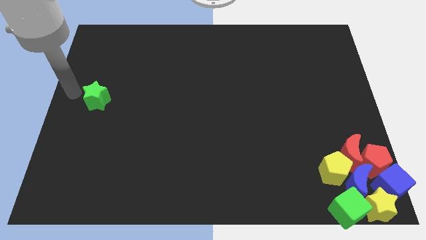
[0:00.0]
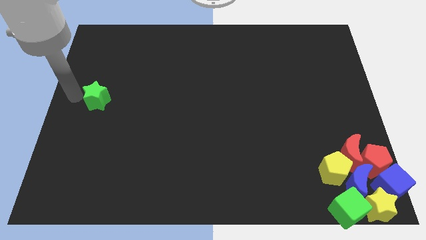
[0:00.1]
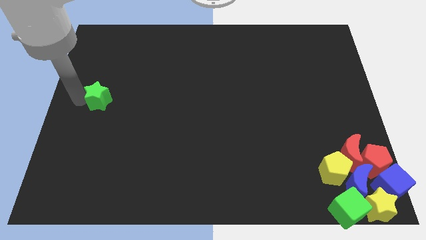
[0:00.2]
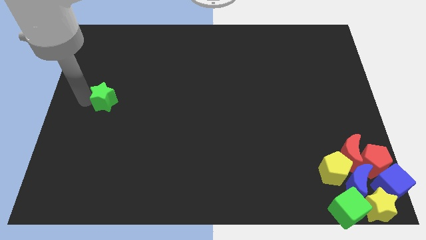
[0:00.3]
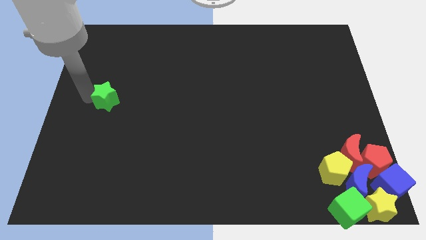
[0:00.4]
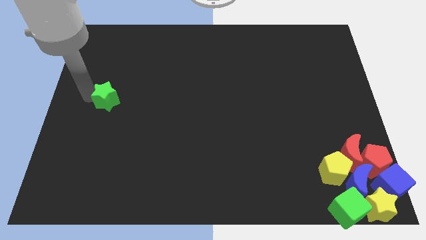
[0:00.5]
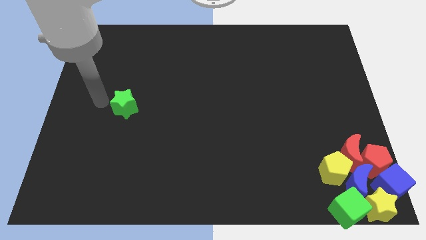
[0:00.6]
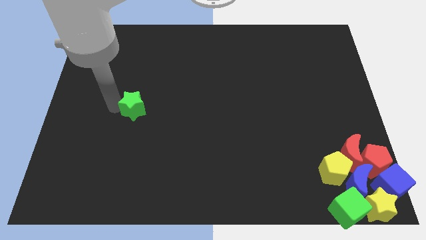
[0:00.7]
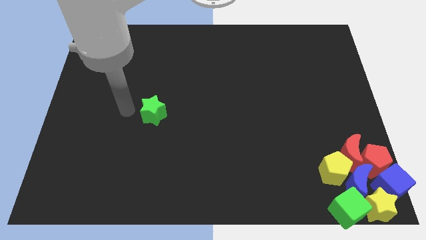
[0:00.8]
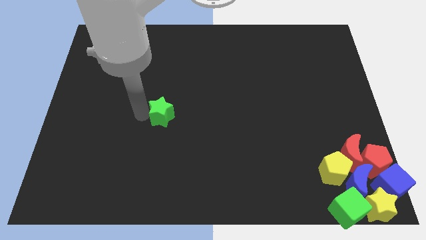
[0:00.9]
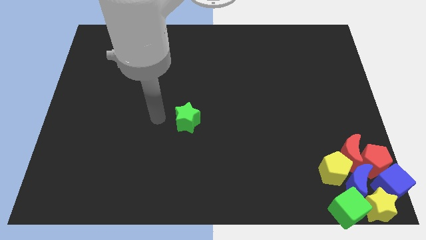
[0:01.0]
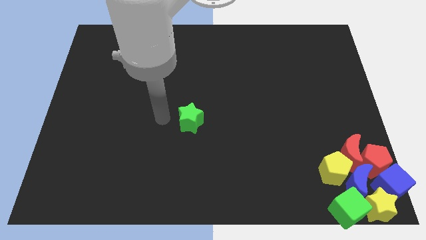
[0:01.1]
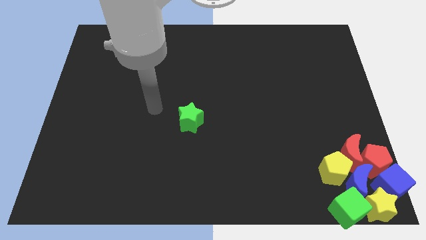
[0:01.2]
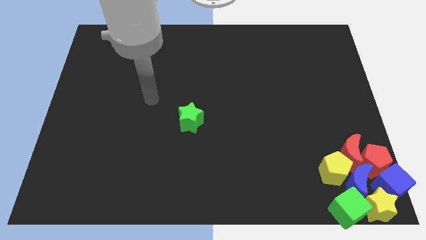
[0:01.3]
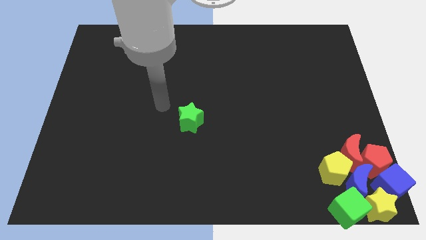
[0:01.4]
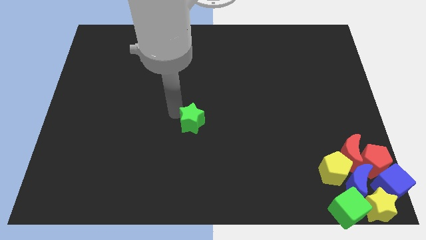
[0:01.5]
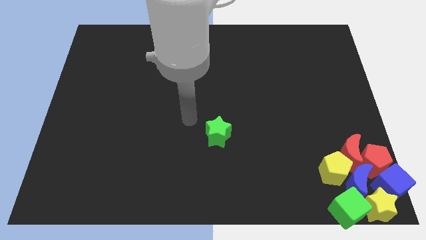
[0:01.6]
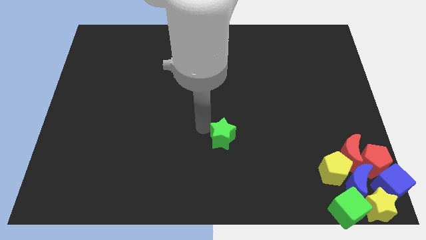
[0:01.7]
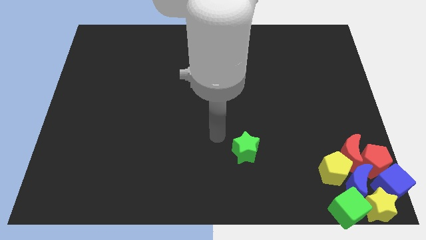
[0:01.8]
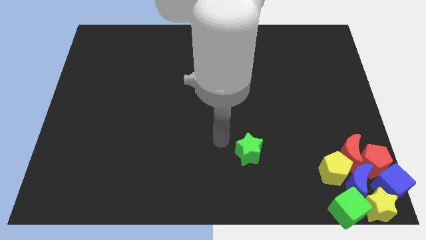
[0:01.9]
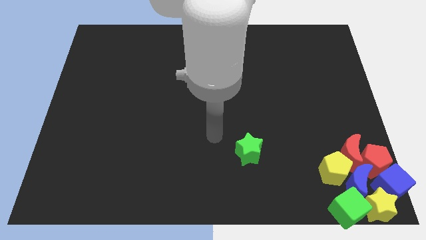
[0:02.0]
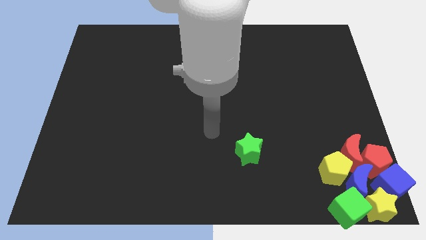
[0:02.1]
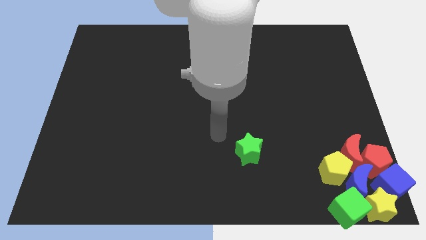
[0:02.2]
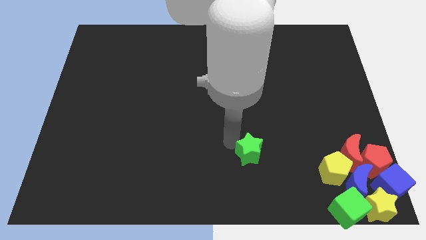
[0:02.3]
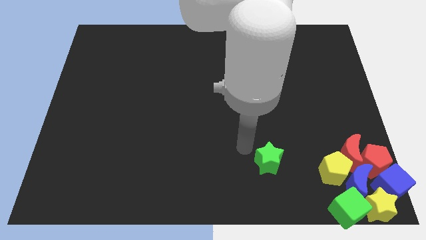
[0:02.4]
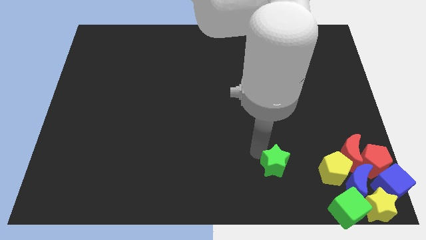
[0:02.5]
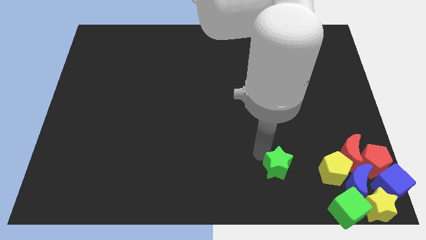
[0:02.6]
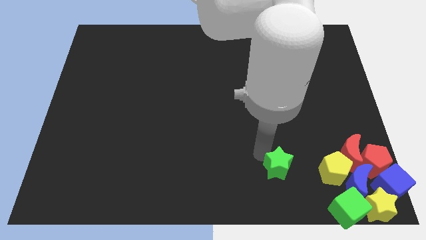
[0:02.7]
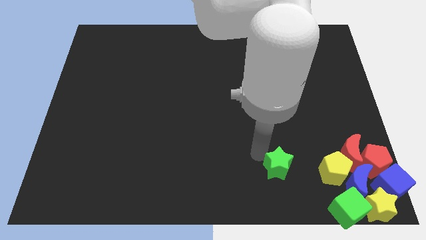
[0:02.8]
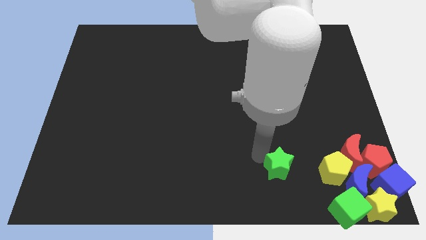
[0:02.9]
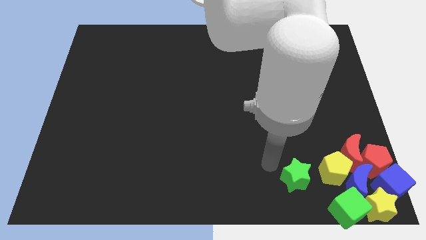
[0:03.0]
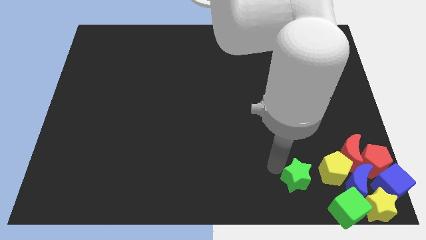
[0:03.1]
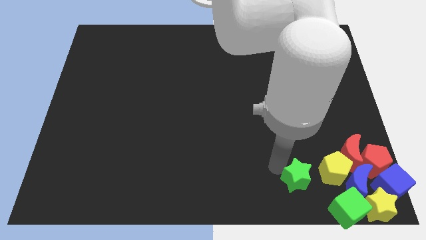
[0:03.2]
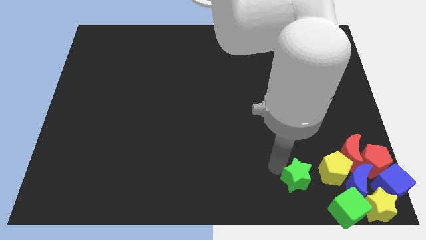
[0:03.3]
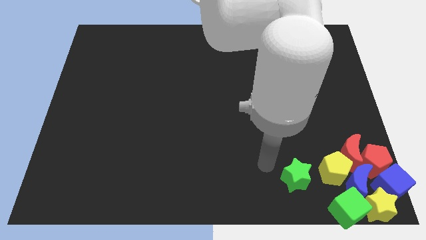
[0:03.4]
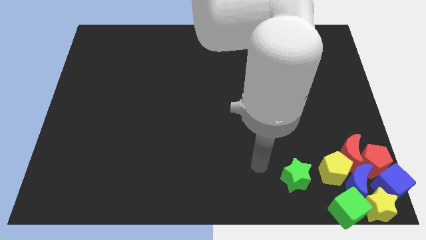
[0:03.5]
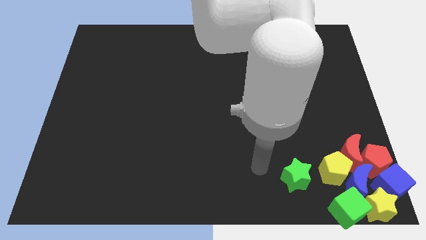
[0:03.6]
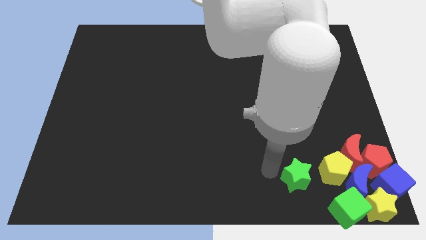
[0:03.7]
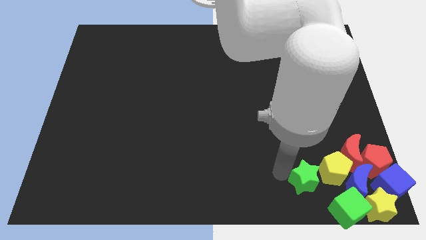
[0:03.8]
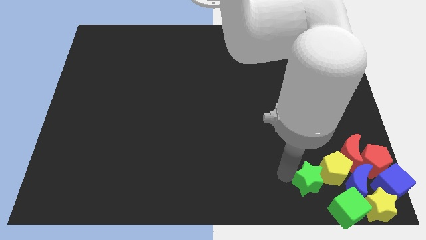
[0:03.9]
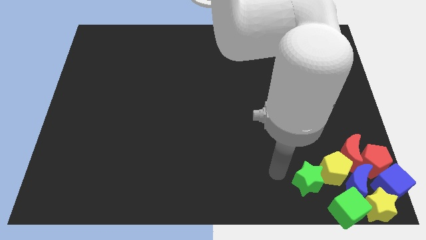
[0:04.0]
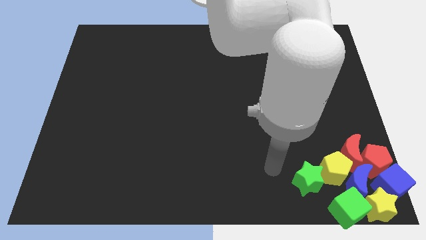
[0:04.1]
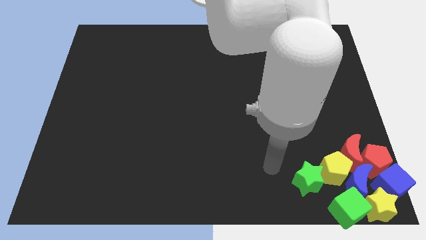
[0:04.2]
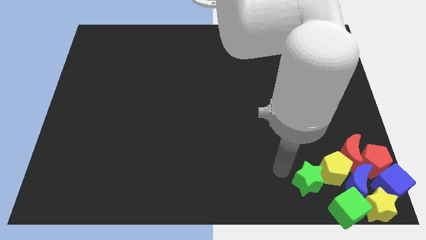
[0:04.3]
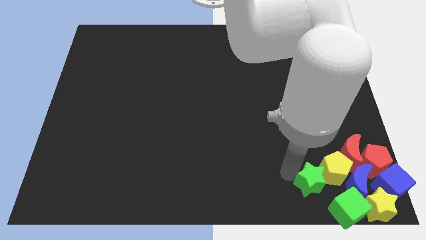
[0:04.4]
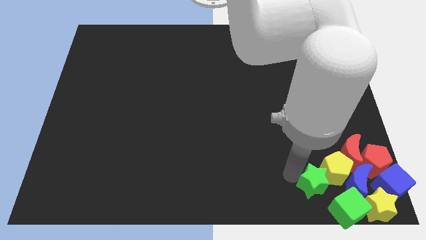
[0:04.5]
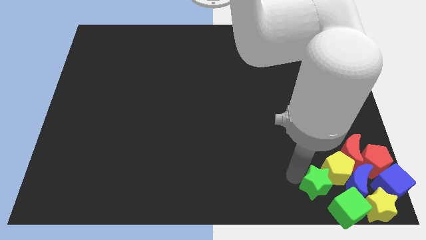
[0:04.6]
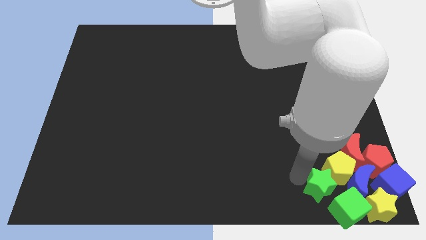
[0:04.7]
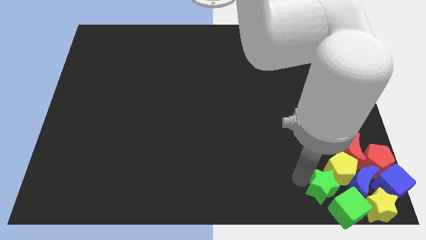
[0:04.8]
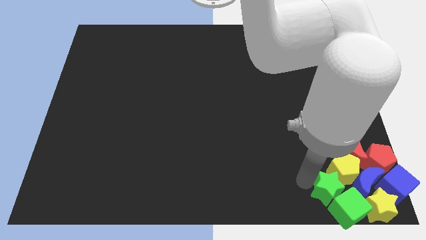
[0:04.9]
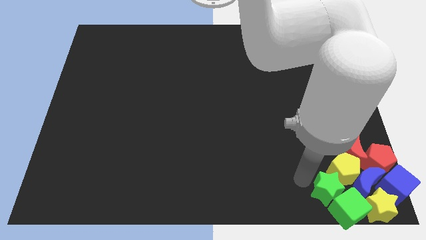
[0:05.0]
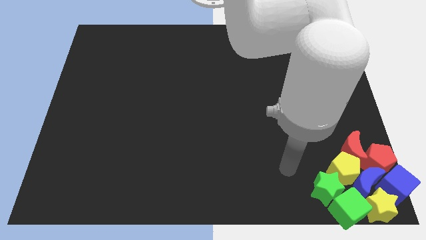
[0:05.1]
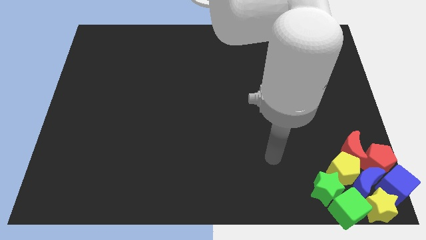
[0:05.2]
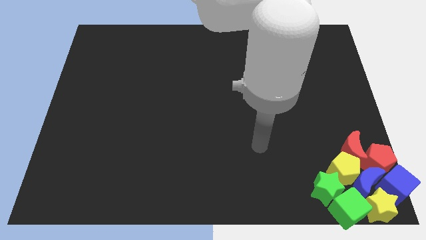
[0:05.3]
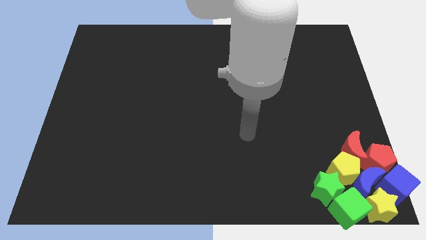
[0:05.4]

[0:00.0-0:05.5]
push the green star into the yellow pentagon

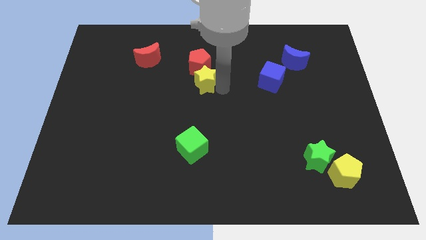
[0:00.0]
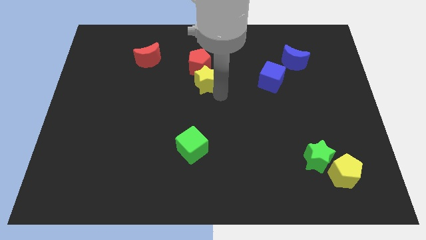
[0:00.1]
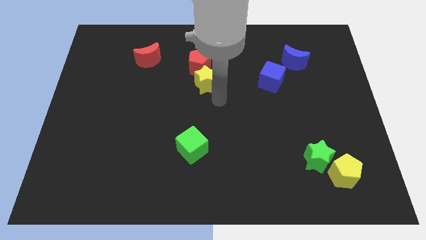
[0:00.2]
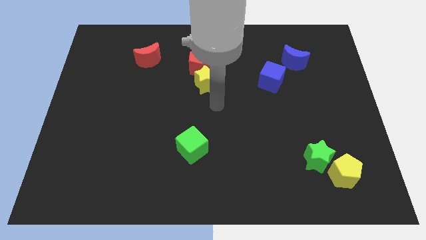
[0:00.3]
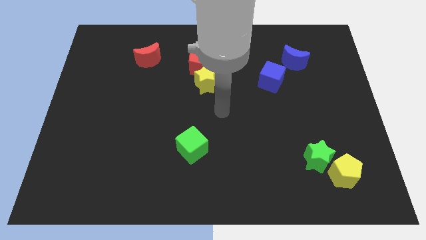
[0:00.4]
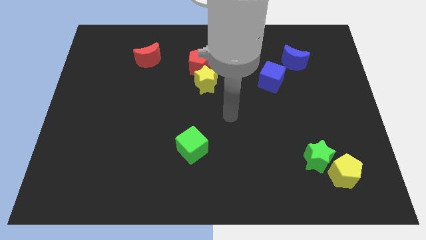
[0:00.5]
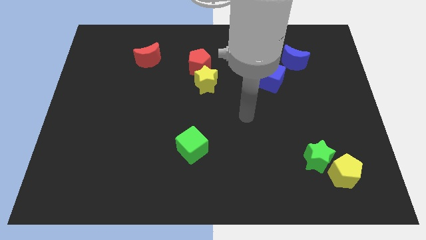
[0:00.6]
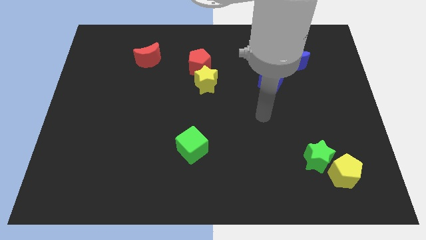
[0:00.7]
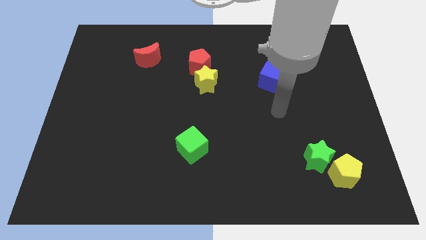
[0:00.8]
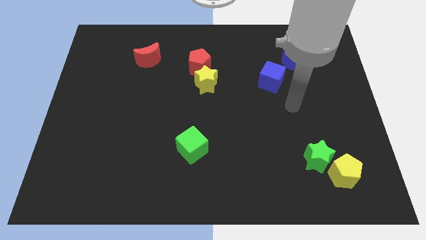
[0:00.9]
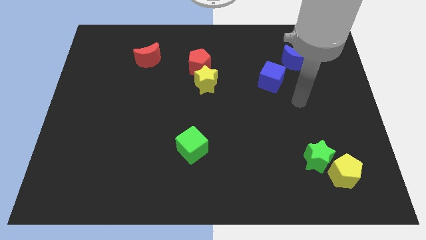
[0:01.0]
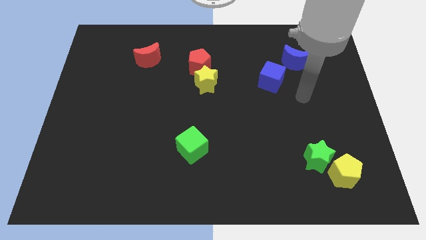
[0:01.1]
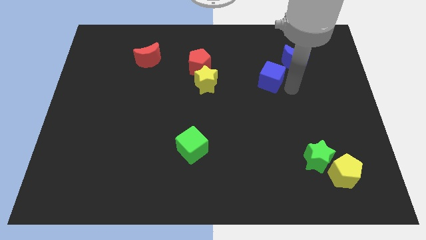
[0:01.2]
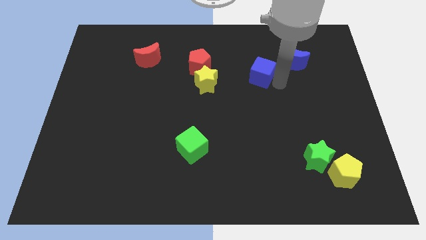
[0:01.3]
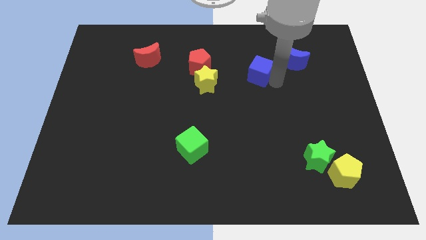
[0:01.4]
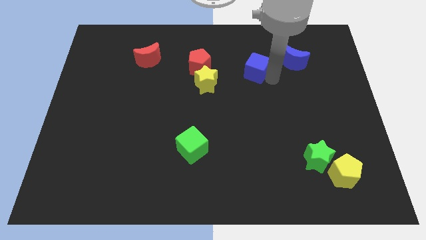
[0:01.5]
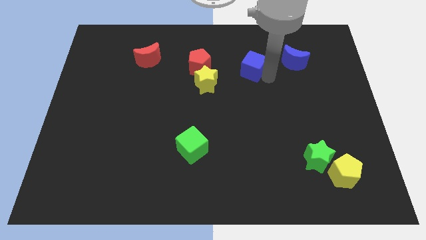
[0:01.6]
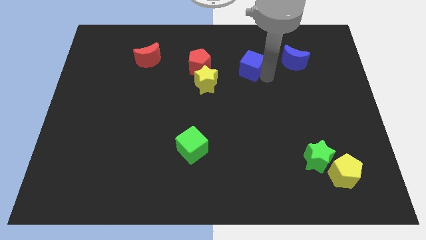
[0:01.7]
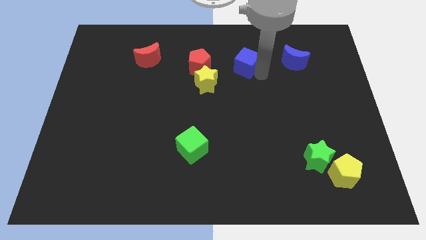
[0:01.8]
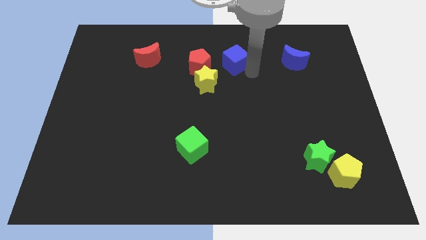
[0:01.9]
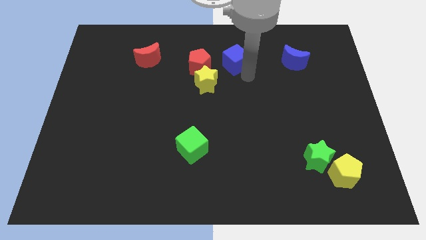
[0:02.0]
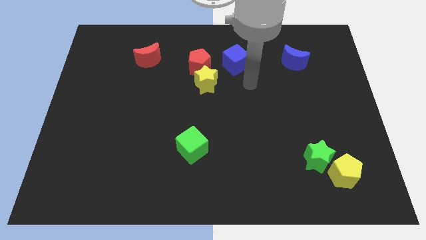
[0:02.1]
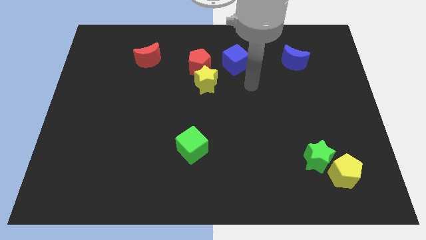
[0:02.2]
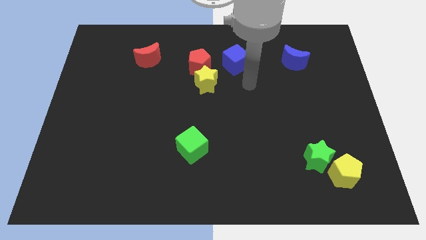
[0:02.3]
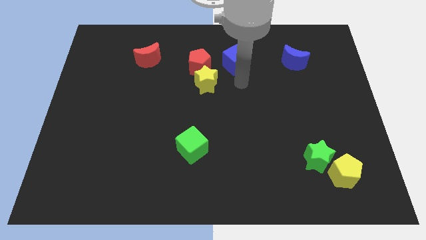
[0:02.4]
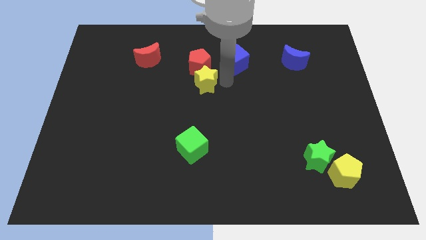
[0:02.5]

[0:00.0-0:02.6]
place the blue cube to the right of red pentagon

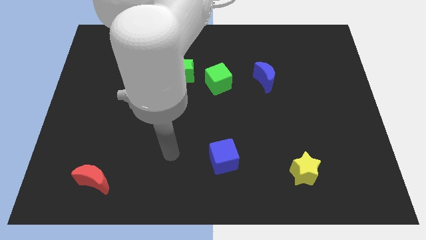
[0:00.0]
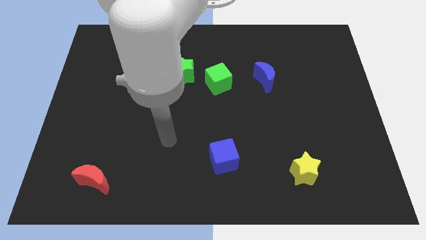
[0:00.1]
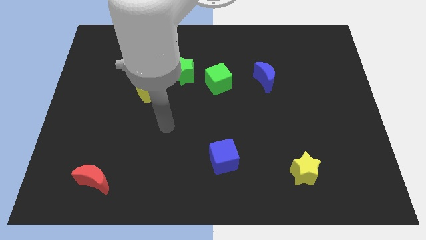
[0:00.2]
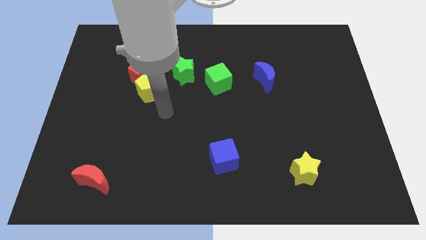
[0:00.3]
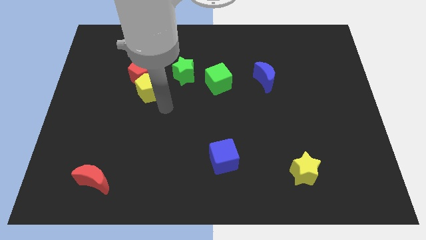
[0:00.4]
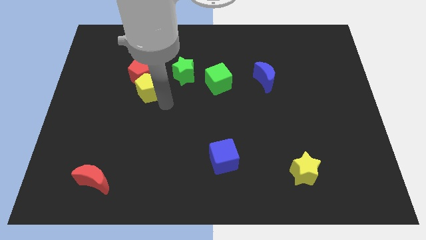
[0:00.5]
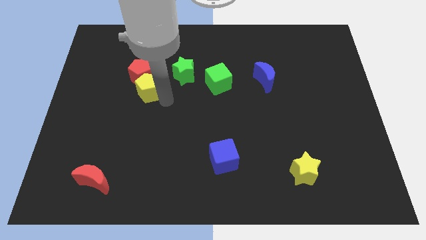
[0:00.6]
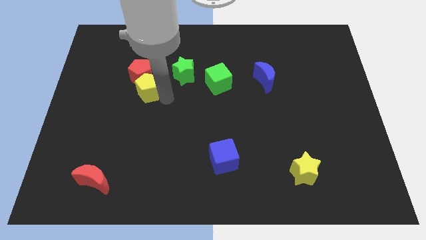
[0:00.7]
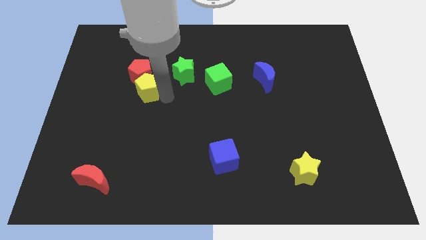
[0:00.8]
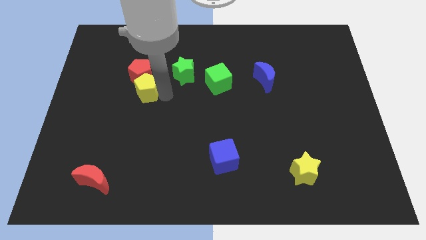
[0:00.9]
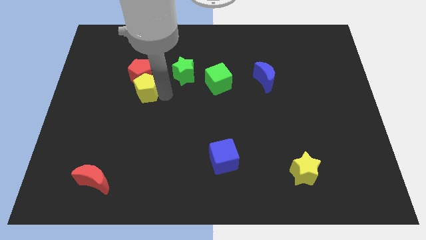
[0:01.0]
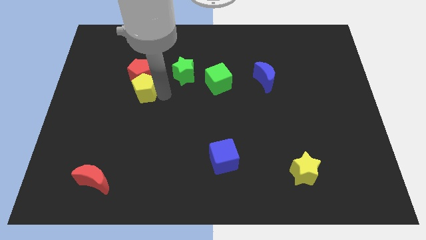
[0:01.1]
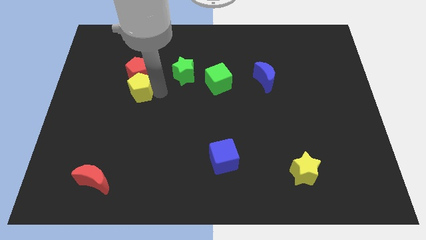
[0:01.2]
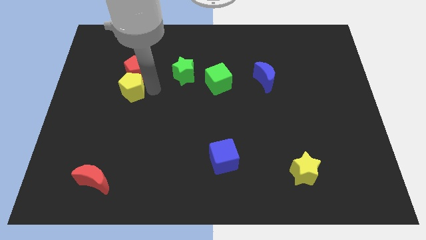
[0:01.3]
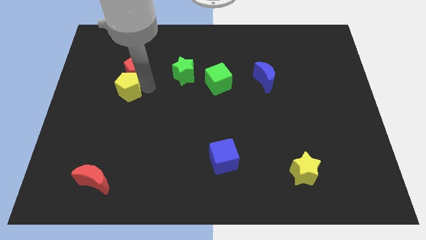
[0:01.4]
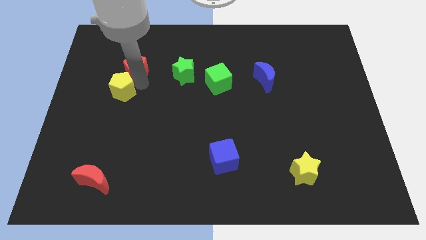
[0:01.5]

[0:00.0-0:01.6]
slightly push the pentagons towards the left side of the board
